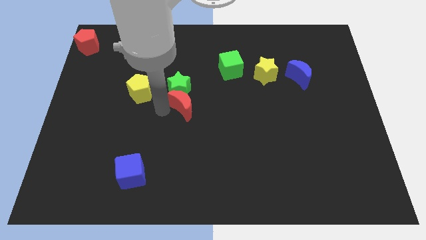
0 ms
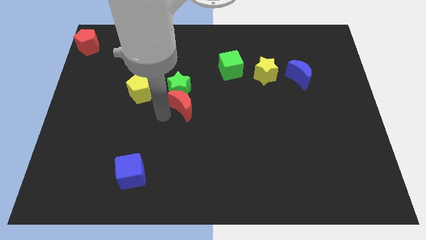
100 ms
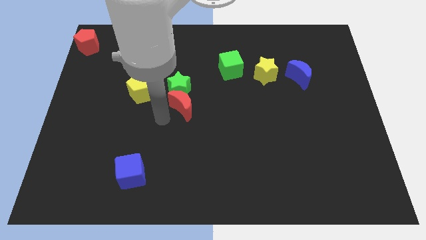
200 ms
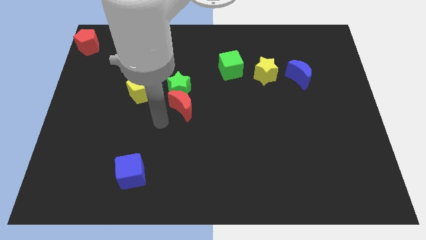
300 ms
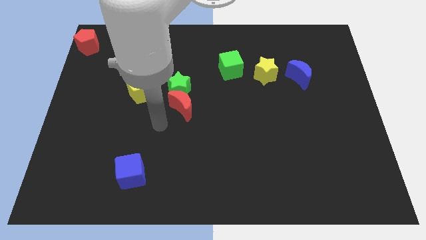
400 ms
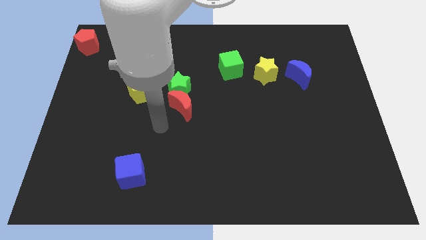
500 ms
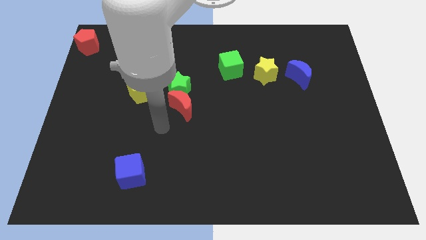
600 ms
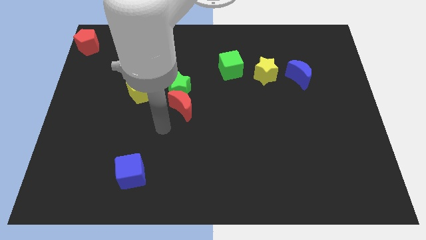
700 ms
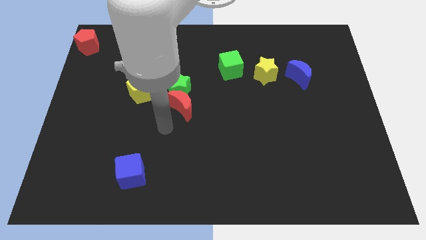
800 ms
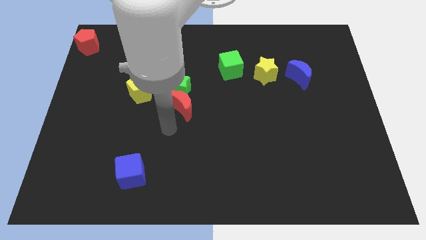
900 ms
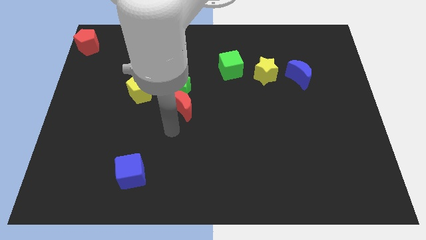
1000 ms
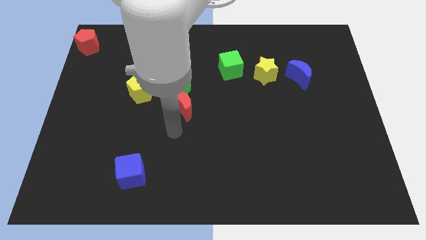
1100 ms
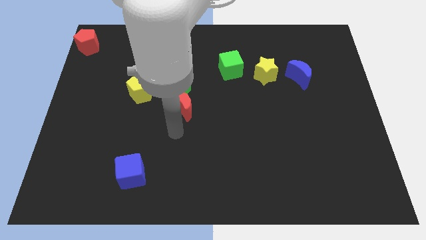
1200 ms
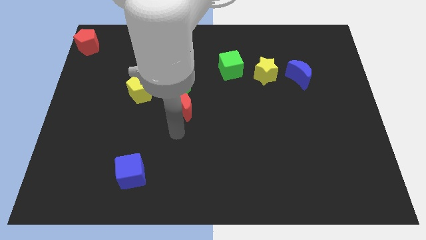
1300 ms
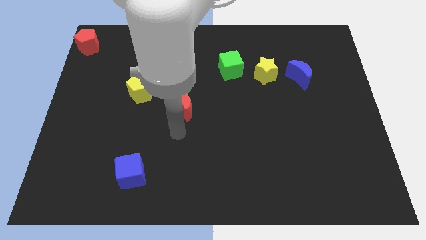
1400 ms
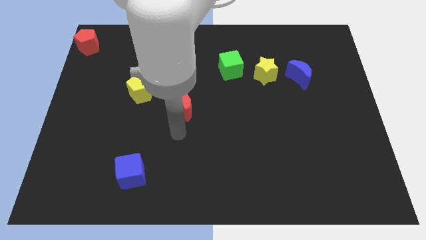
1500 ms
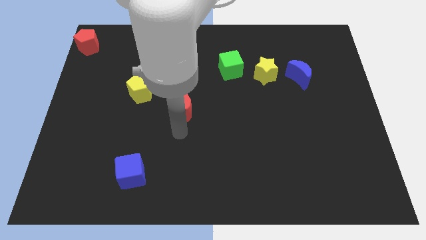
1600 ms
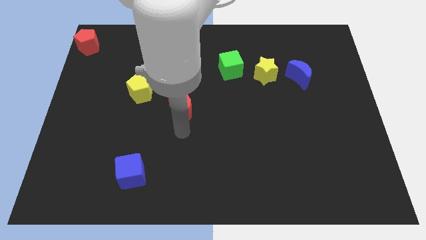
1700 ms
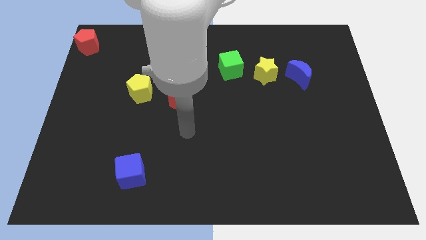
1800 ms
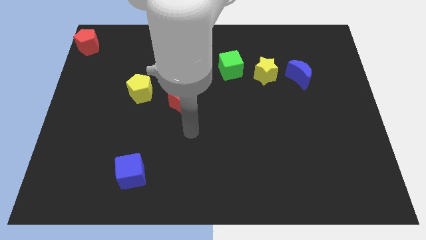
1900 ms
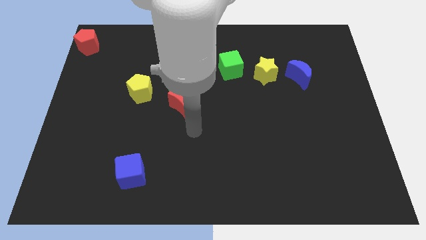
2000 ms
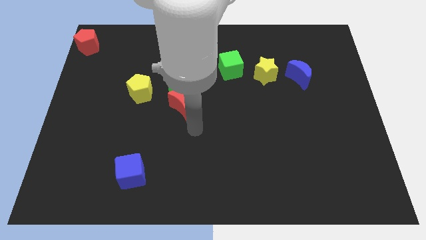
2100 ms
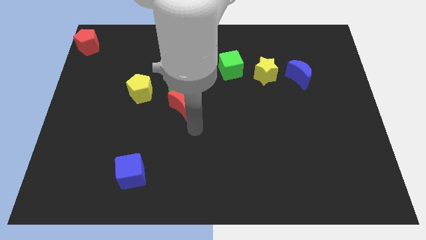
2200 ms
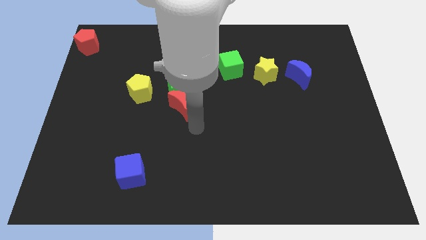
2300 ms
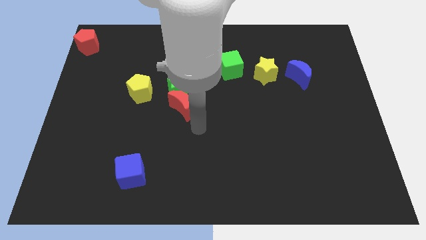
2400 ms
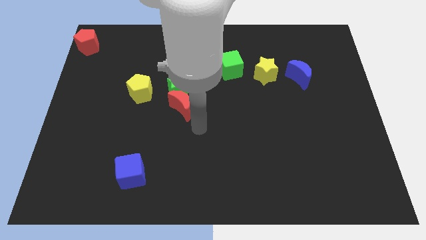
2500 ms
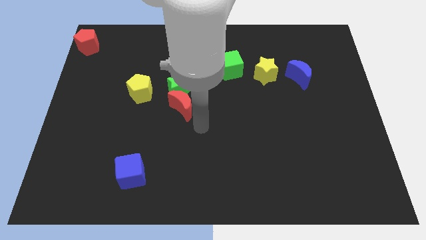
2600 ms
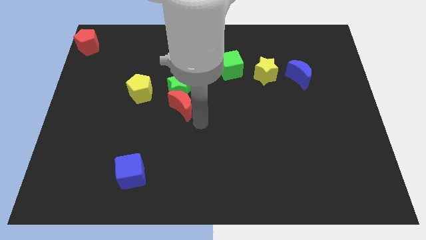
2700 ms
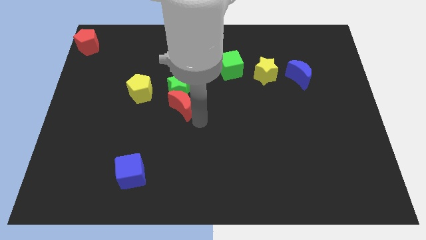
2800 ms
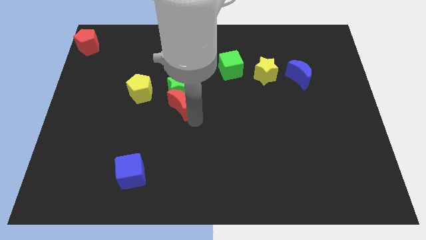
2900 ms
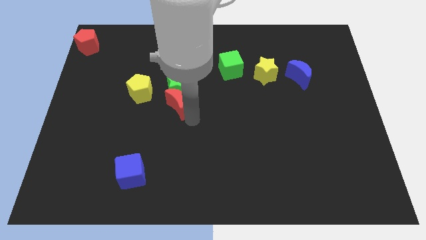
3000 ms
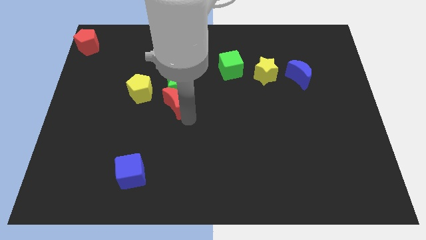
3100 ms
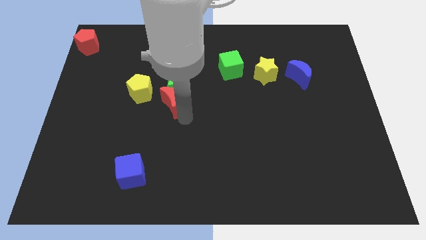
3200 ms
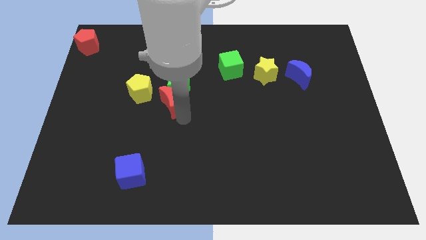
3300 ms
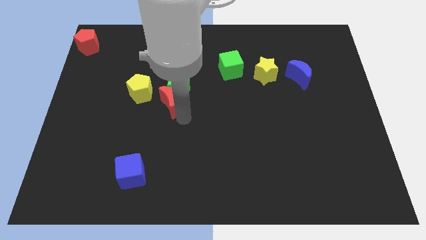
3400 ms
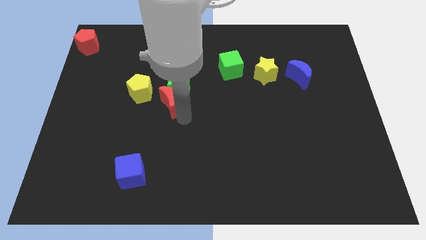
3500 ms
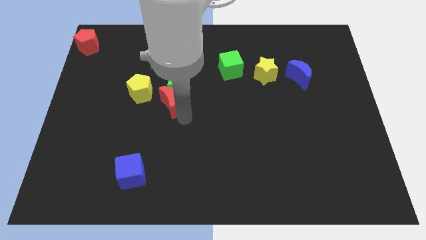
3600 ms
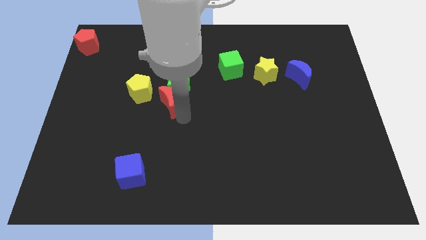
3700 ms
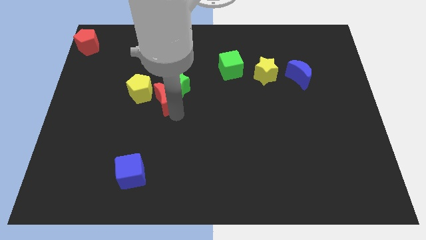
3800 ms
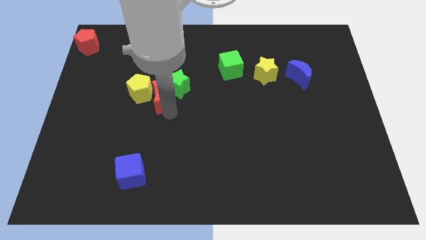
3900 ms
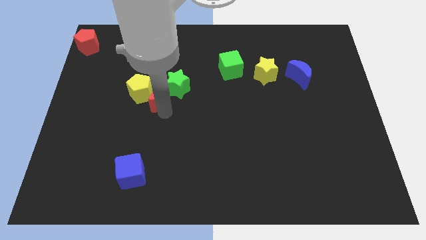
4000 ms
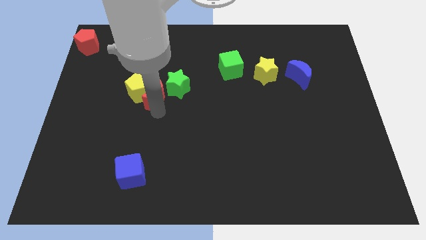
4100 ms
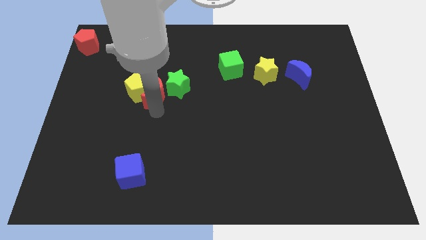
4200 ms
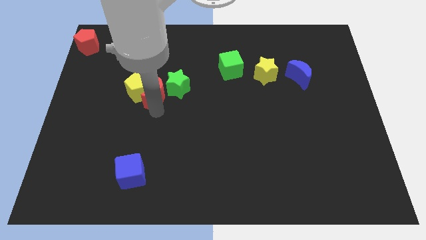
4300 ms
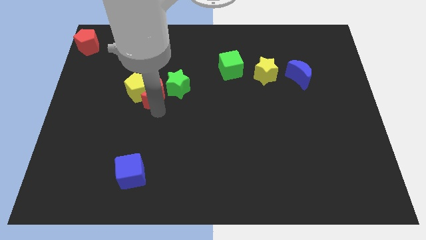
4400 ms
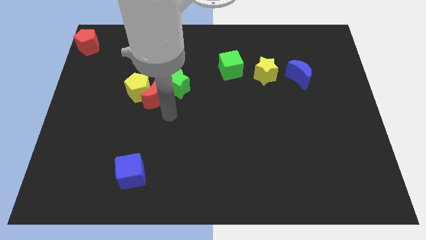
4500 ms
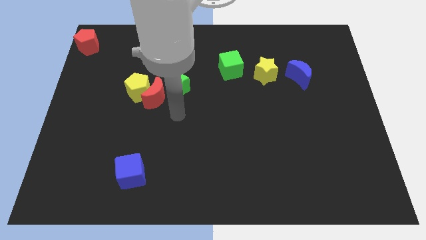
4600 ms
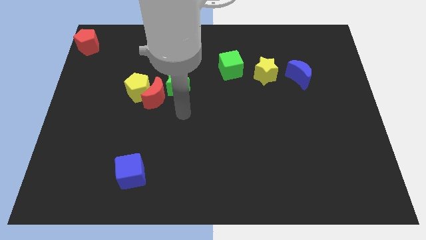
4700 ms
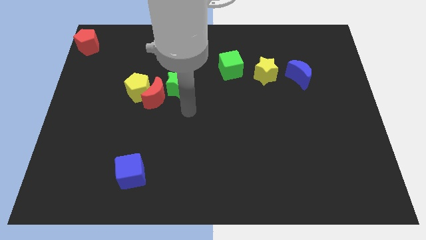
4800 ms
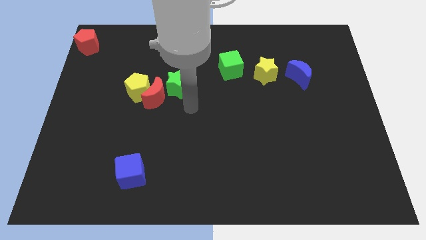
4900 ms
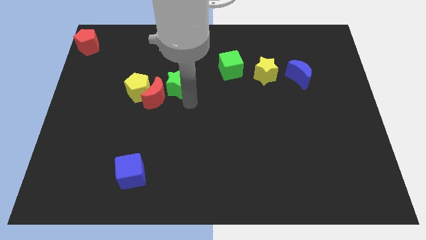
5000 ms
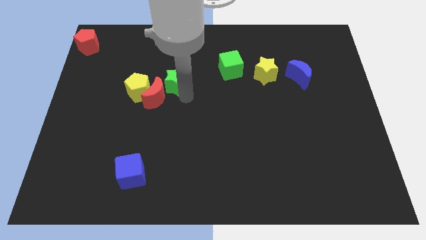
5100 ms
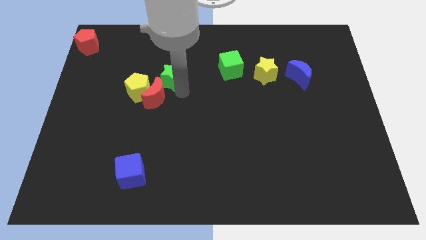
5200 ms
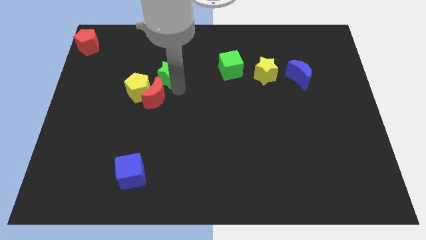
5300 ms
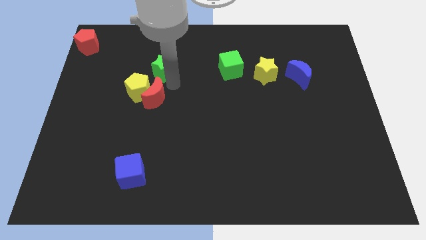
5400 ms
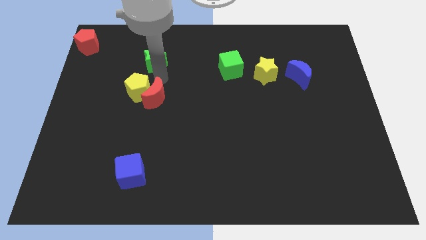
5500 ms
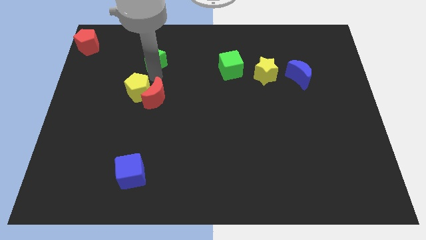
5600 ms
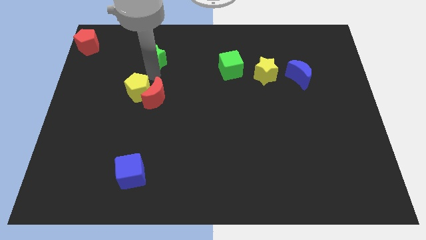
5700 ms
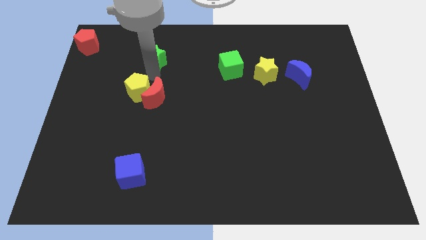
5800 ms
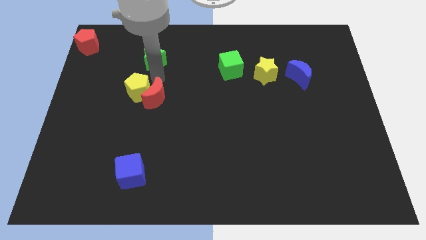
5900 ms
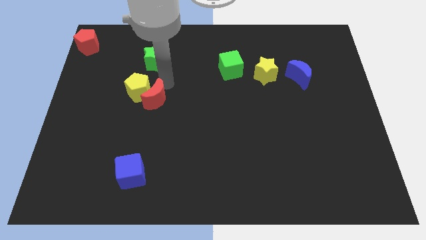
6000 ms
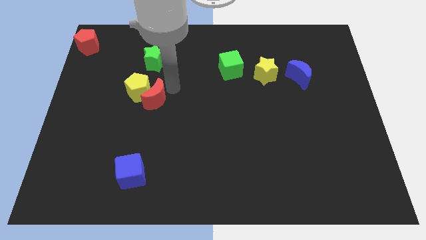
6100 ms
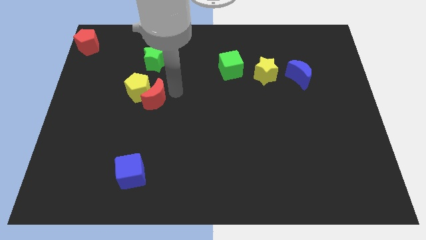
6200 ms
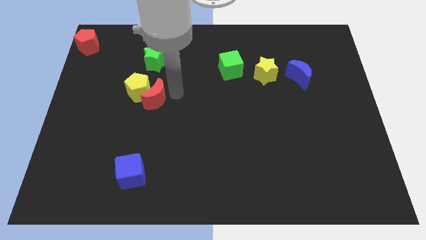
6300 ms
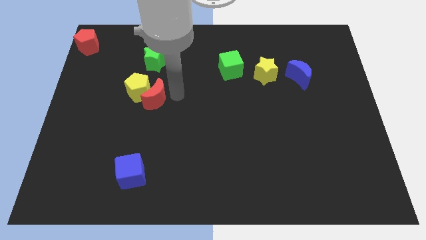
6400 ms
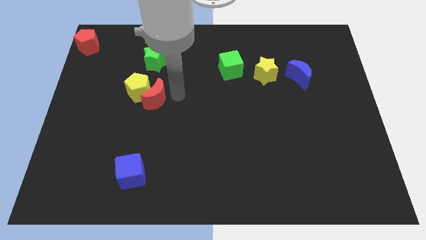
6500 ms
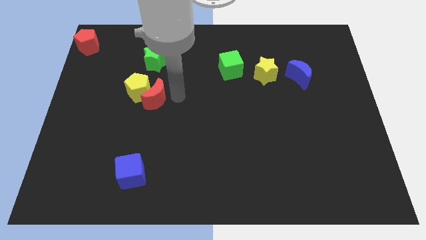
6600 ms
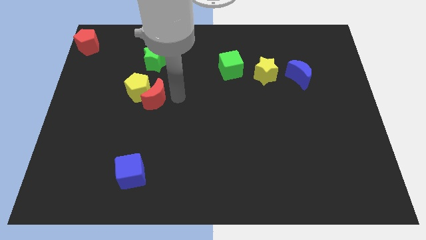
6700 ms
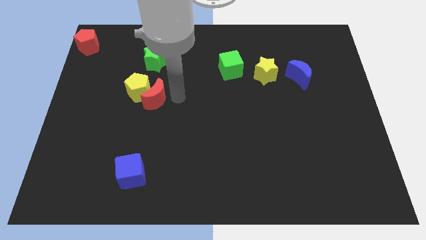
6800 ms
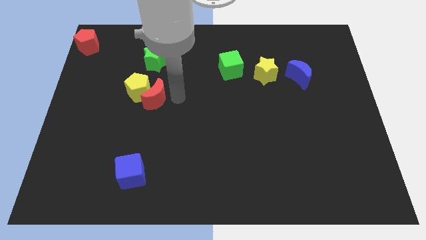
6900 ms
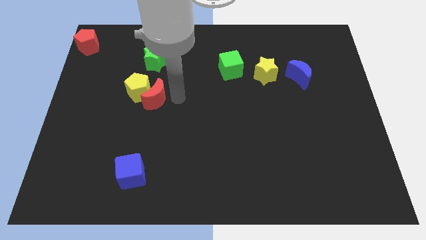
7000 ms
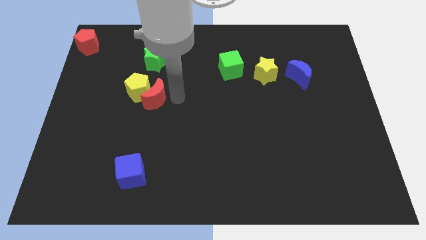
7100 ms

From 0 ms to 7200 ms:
move the green star towards top left

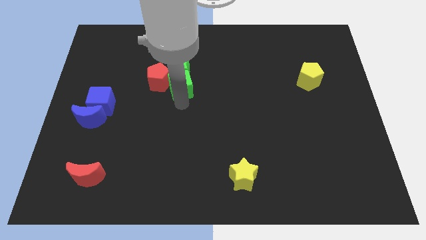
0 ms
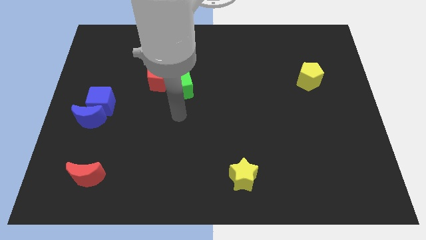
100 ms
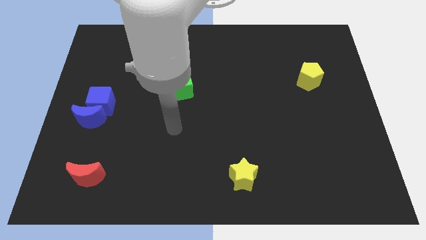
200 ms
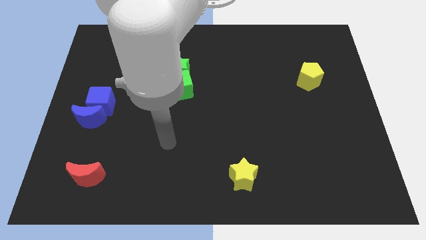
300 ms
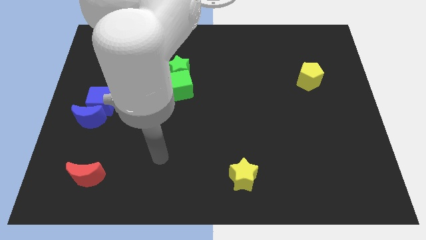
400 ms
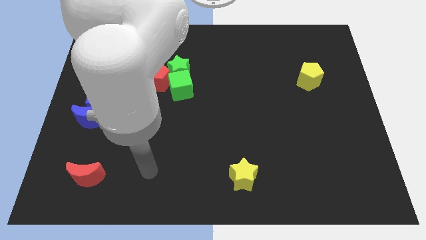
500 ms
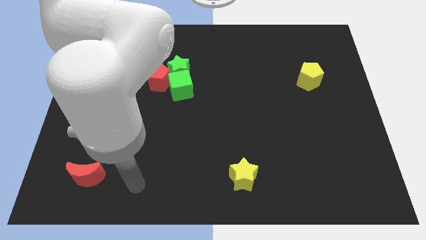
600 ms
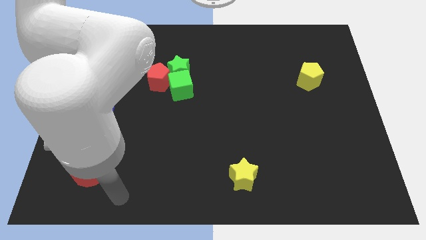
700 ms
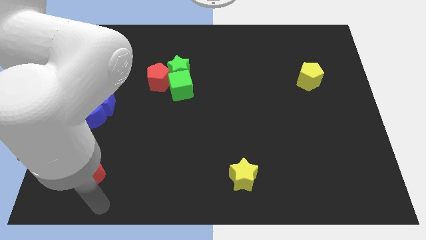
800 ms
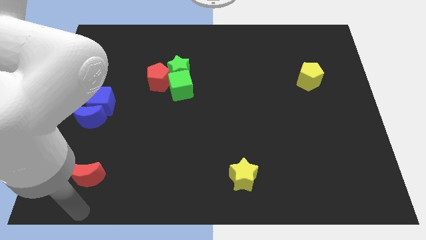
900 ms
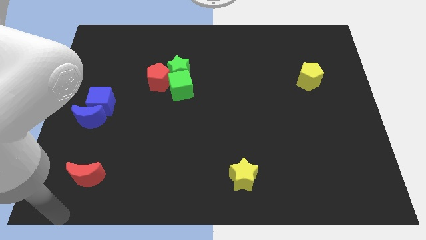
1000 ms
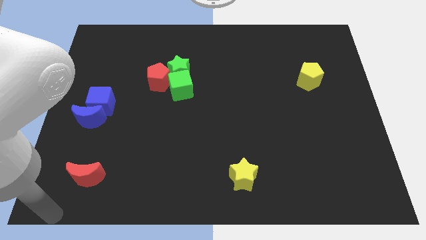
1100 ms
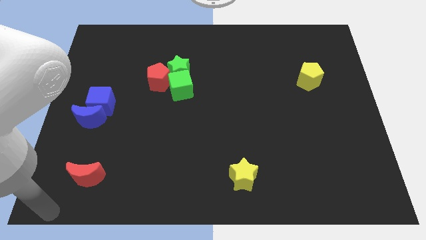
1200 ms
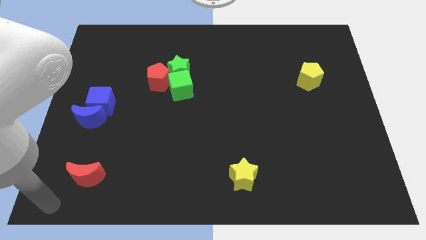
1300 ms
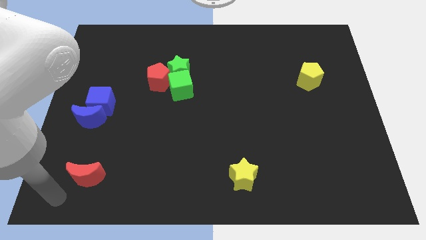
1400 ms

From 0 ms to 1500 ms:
place your arm at the bottom left side of the red moon

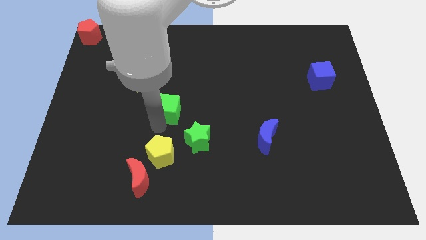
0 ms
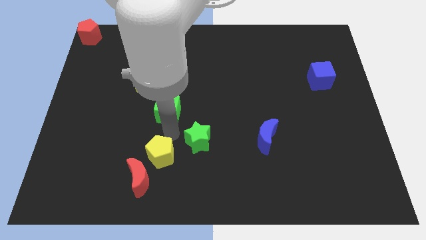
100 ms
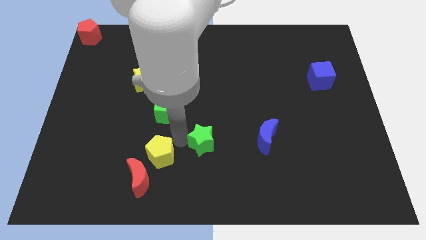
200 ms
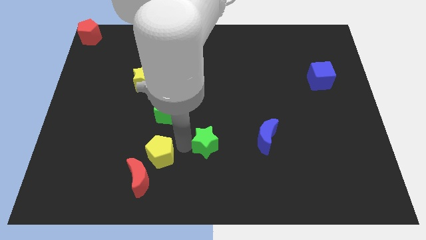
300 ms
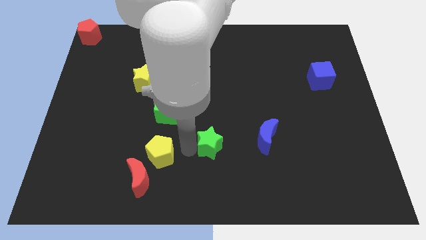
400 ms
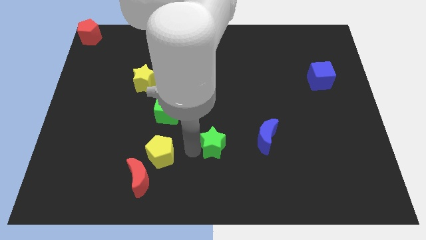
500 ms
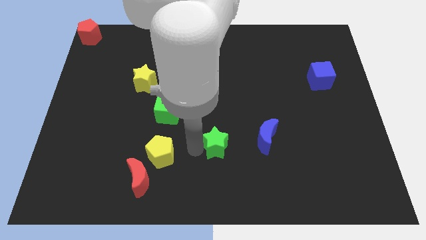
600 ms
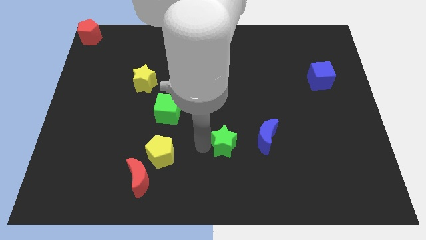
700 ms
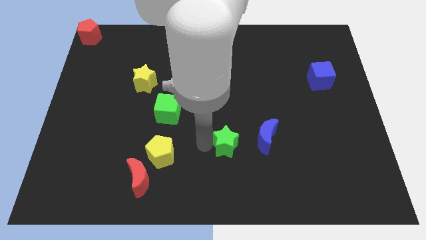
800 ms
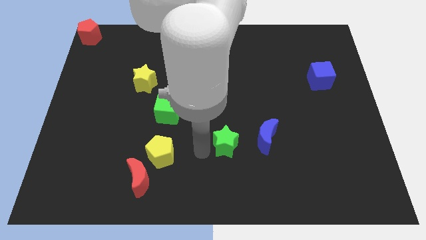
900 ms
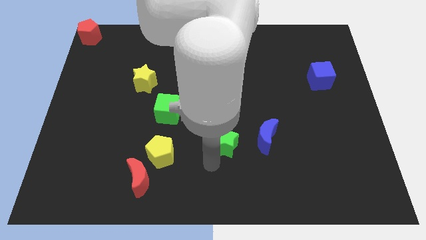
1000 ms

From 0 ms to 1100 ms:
push green star towards blue moon
